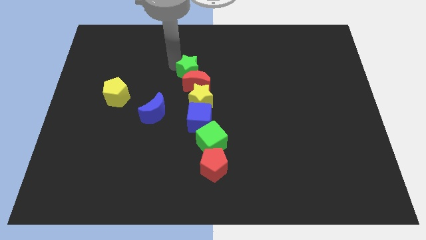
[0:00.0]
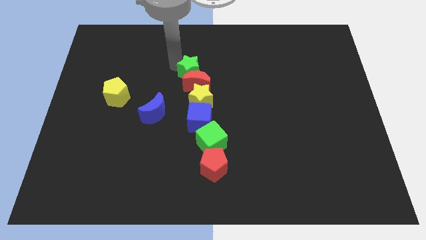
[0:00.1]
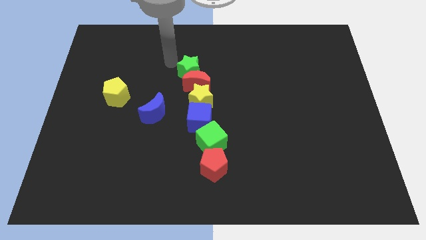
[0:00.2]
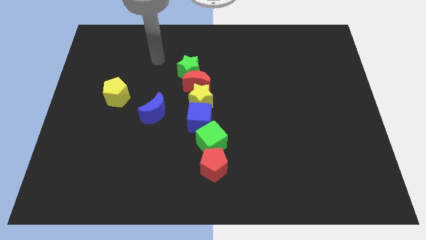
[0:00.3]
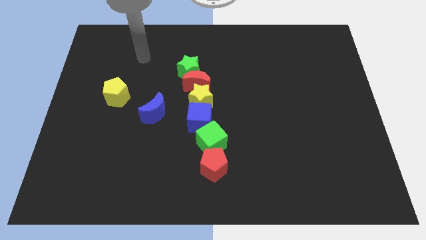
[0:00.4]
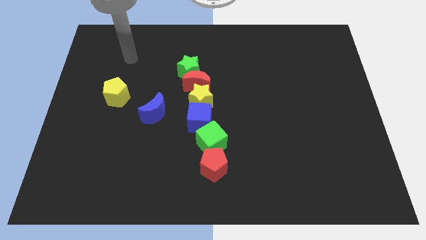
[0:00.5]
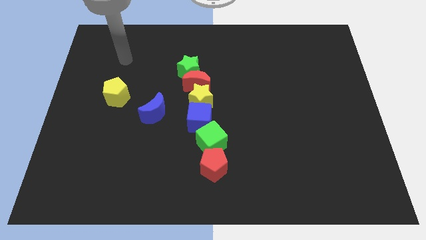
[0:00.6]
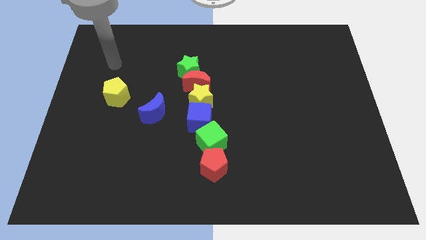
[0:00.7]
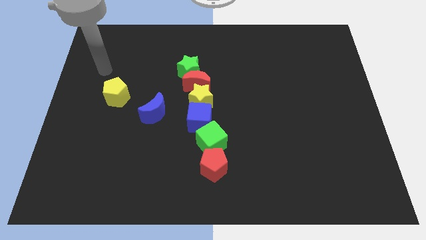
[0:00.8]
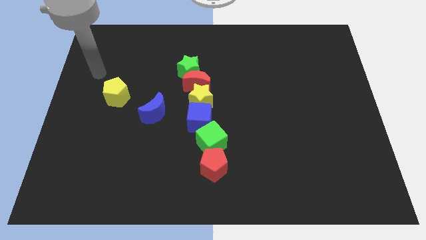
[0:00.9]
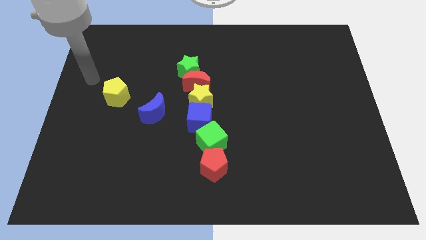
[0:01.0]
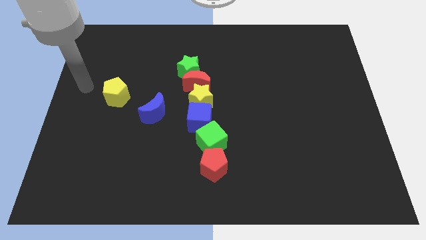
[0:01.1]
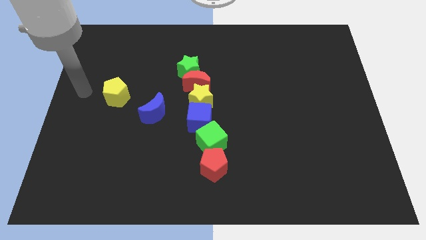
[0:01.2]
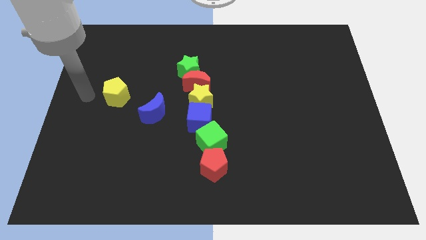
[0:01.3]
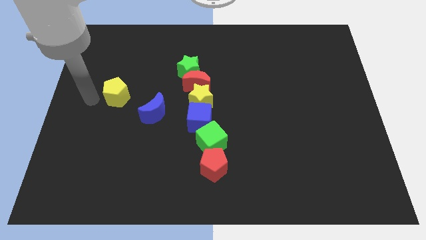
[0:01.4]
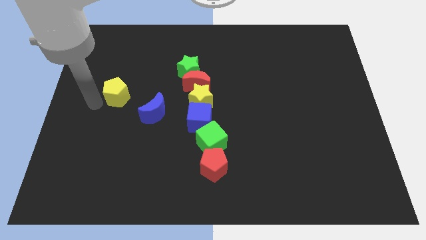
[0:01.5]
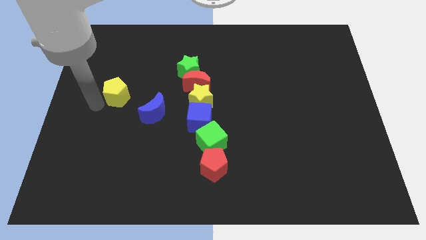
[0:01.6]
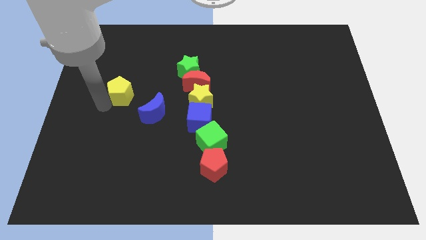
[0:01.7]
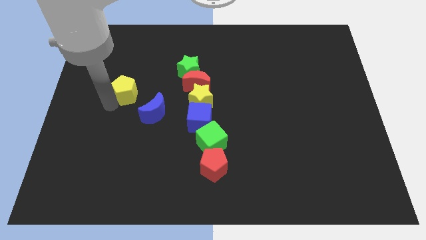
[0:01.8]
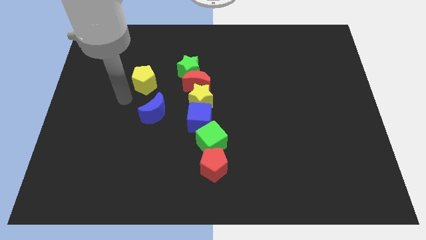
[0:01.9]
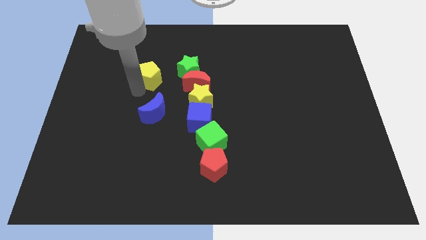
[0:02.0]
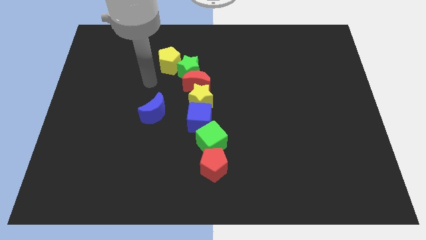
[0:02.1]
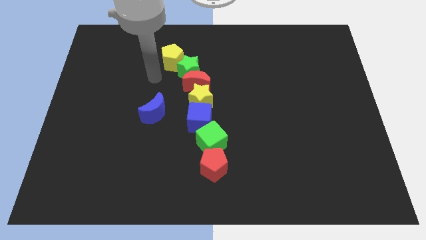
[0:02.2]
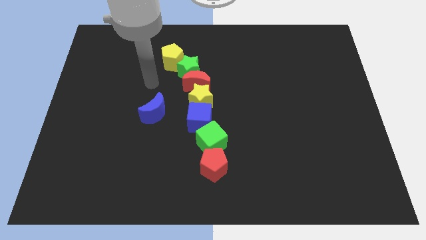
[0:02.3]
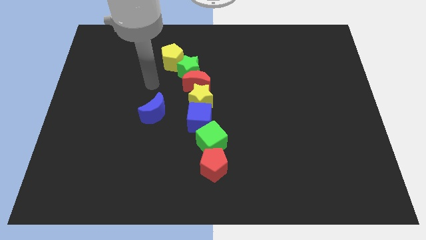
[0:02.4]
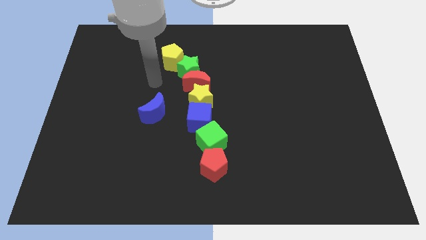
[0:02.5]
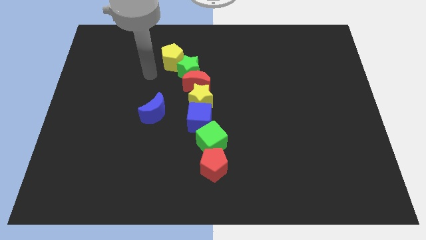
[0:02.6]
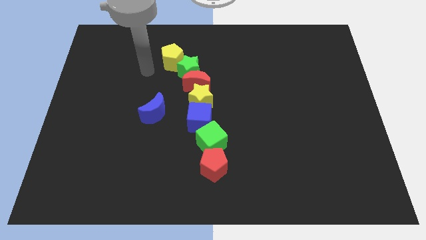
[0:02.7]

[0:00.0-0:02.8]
place the yellow pentagon close to the green star

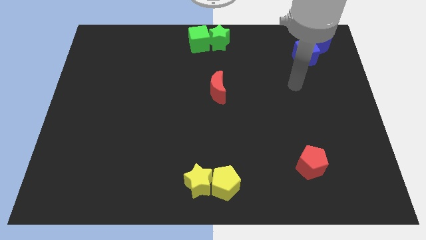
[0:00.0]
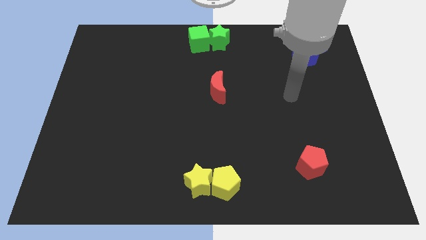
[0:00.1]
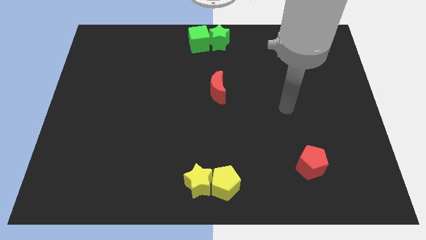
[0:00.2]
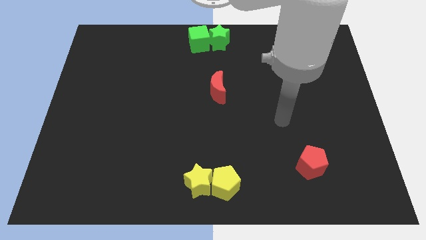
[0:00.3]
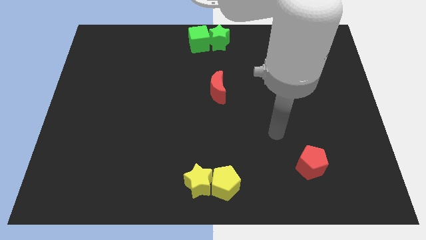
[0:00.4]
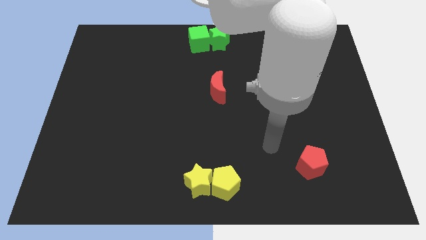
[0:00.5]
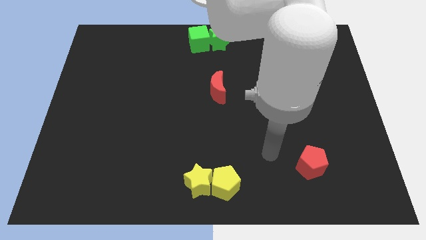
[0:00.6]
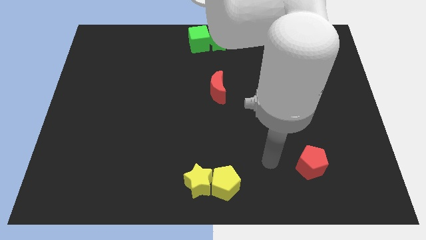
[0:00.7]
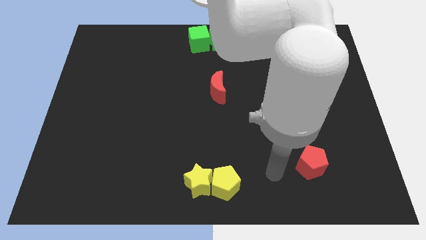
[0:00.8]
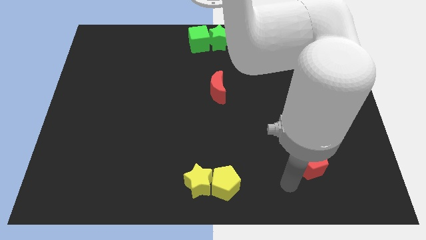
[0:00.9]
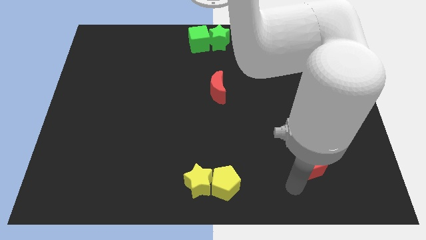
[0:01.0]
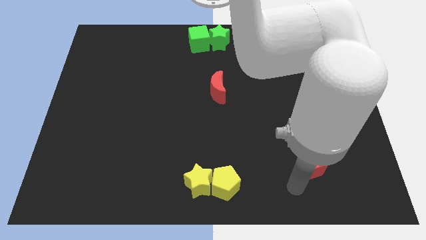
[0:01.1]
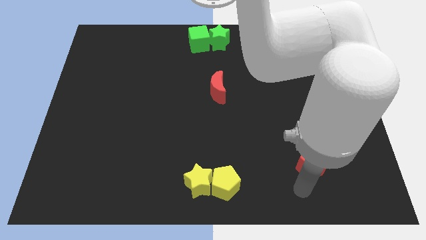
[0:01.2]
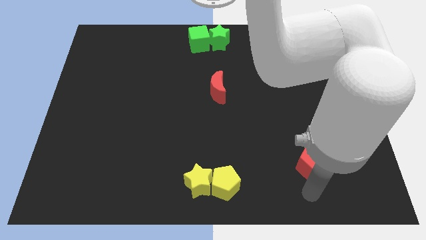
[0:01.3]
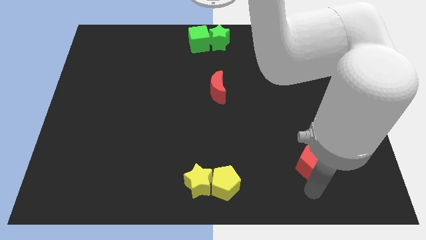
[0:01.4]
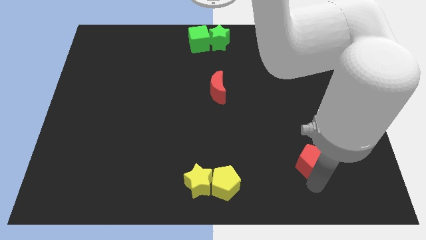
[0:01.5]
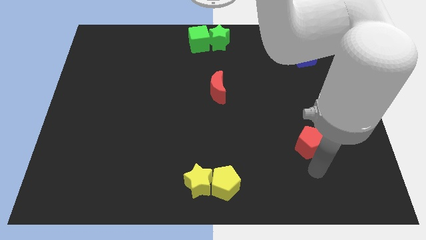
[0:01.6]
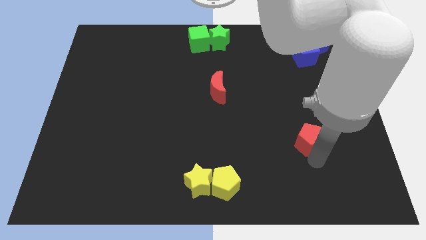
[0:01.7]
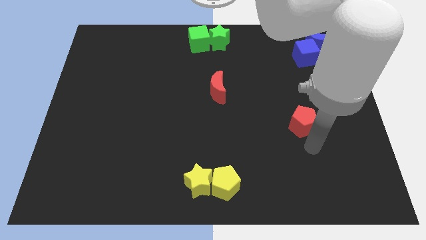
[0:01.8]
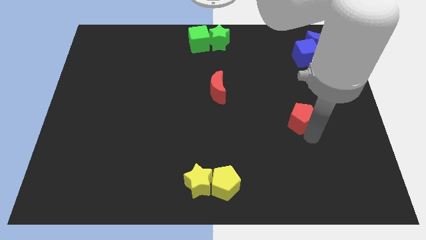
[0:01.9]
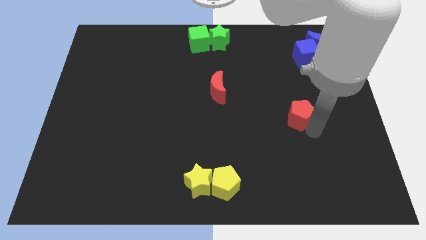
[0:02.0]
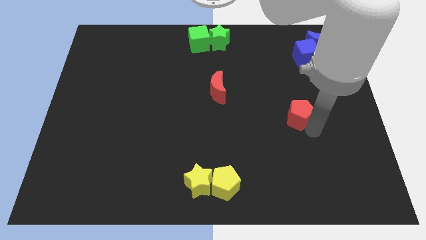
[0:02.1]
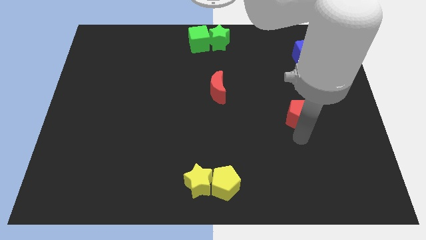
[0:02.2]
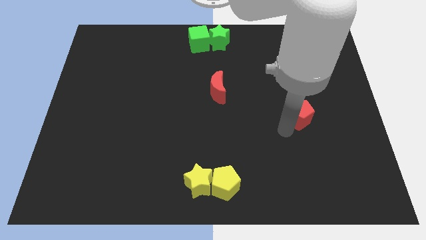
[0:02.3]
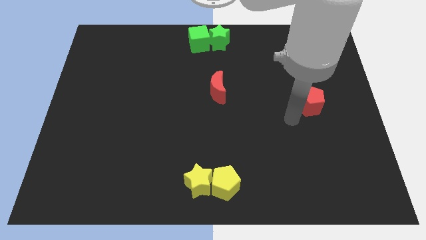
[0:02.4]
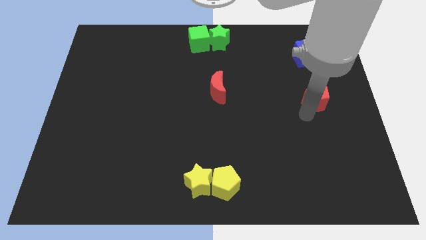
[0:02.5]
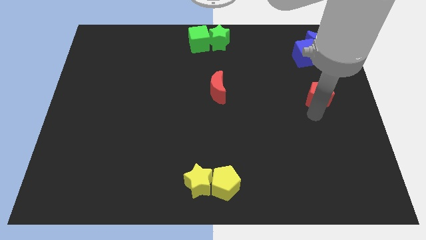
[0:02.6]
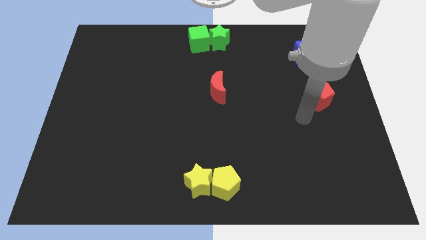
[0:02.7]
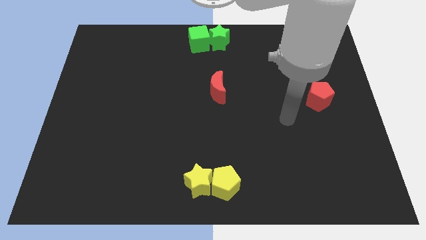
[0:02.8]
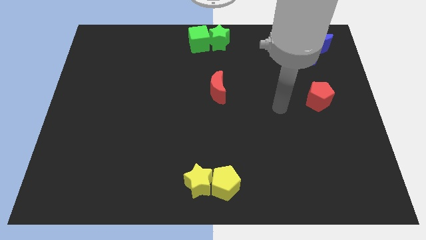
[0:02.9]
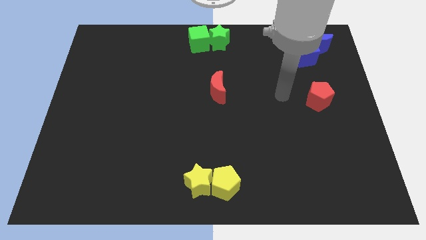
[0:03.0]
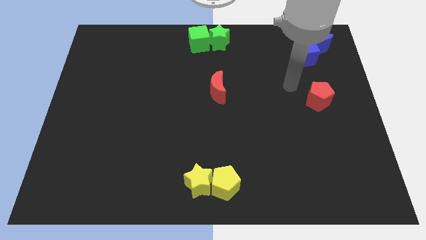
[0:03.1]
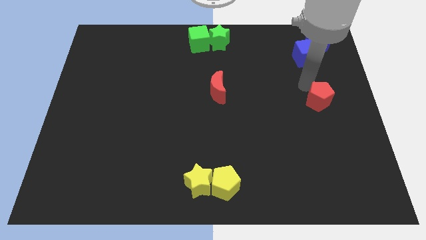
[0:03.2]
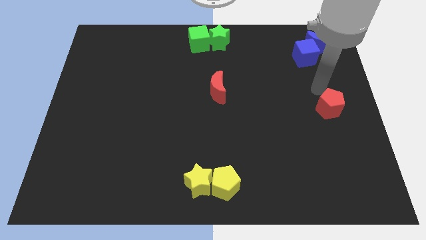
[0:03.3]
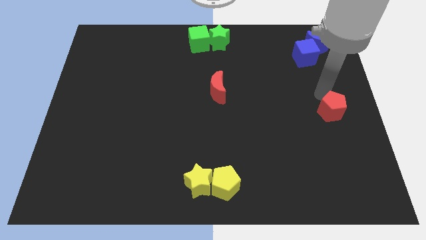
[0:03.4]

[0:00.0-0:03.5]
move the red pentagon to the right center of the board

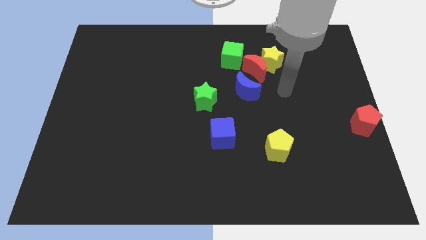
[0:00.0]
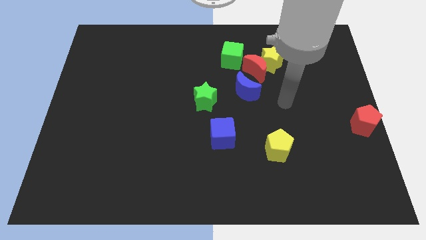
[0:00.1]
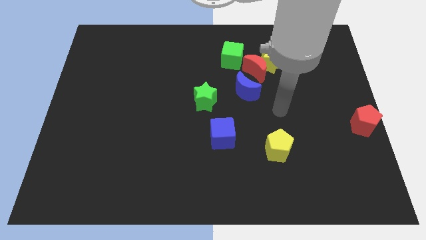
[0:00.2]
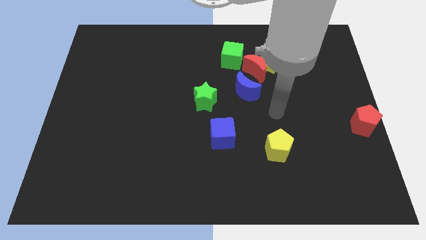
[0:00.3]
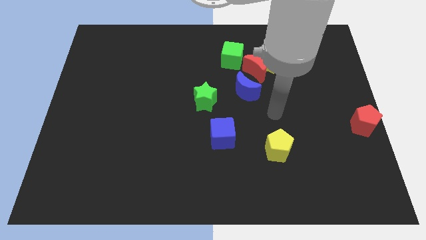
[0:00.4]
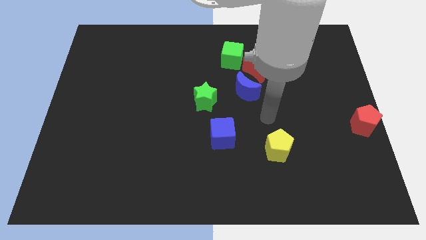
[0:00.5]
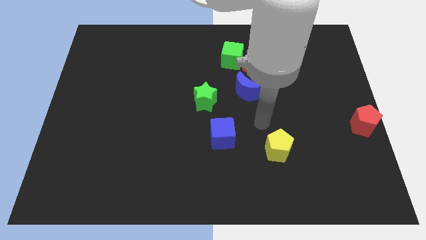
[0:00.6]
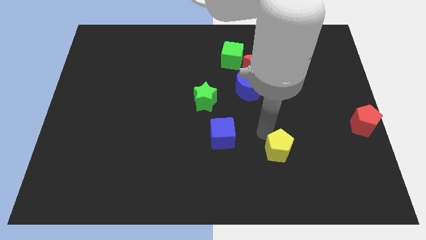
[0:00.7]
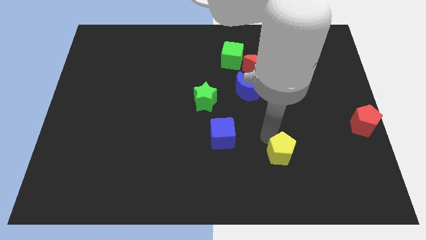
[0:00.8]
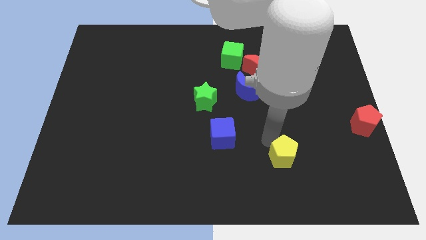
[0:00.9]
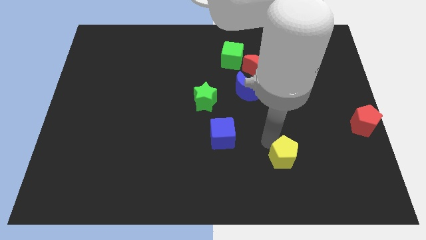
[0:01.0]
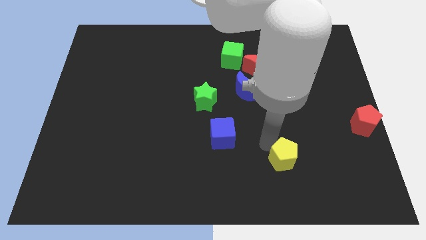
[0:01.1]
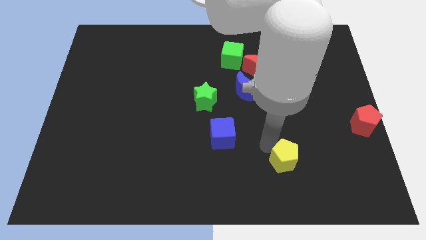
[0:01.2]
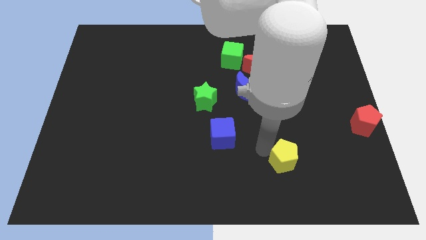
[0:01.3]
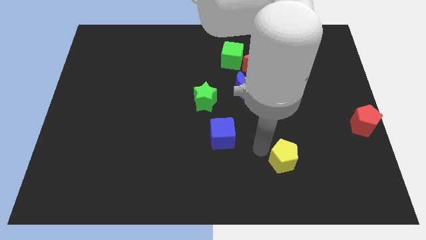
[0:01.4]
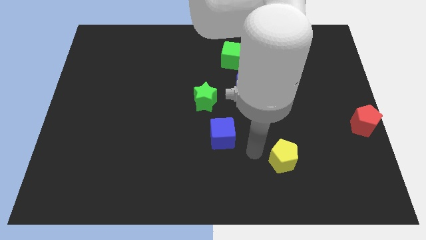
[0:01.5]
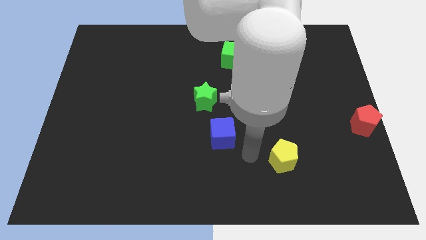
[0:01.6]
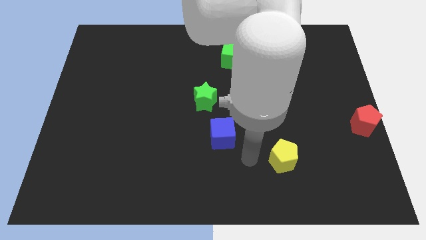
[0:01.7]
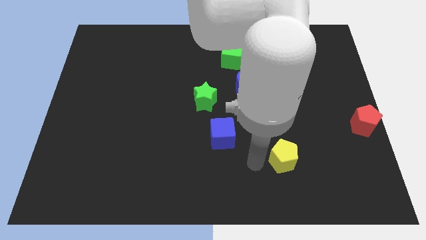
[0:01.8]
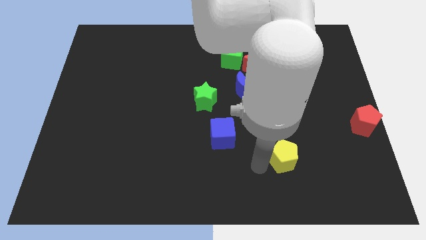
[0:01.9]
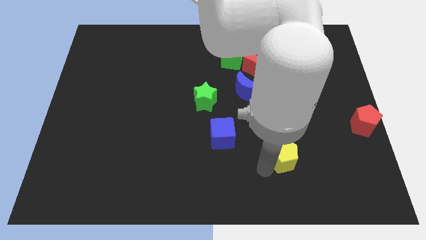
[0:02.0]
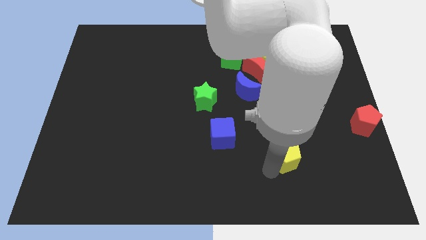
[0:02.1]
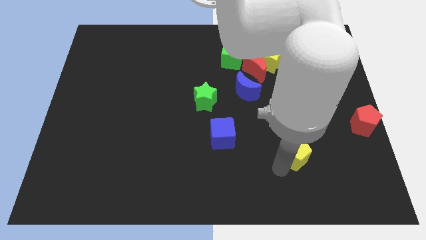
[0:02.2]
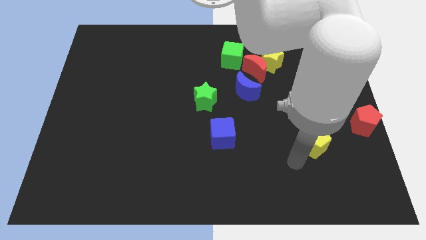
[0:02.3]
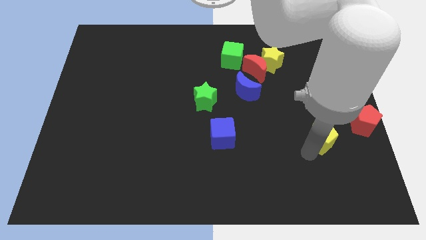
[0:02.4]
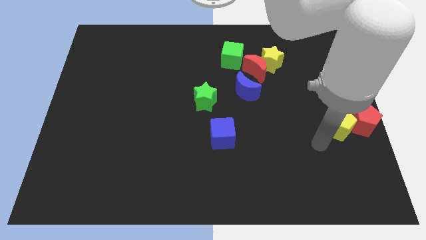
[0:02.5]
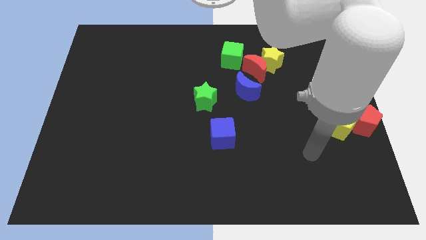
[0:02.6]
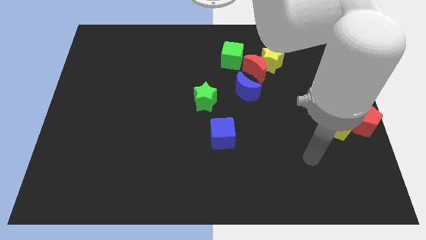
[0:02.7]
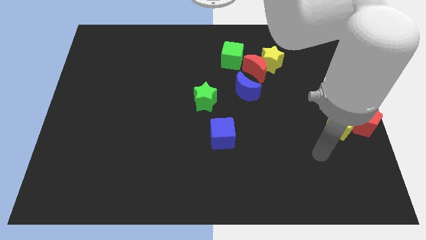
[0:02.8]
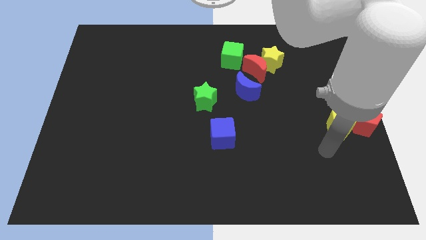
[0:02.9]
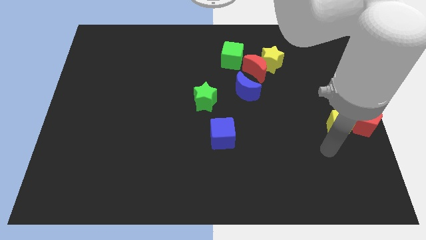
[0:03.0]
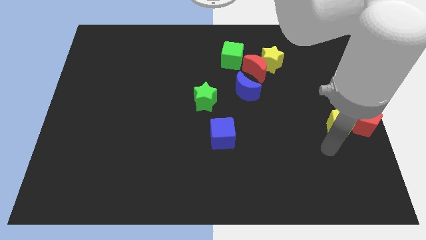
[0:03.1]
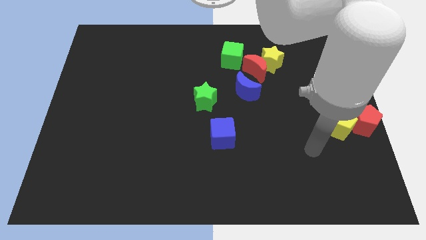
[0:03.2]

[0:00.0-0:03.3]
adjust the yellow pentagon on the left side of the red pentagon
